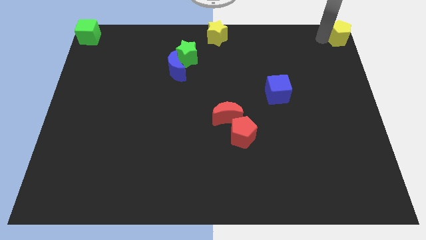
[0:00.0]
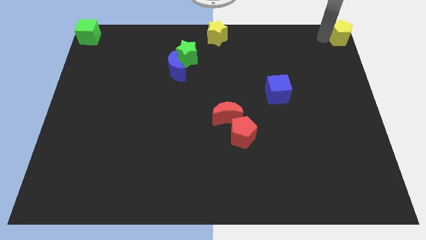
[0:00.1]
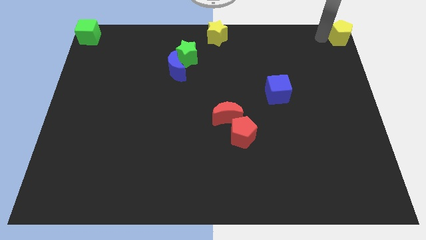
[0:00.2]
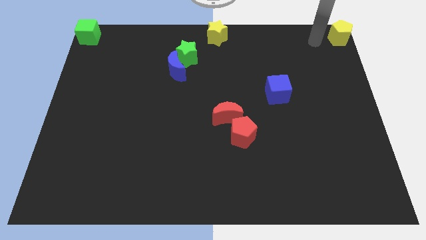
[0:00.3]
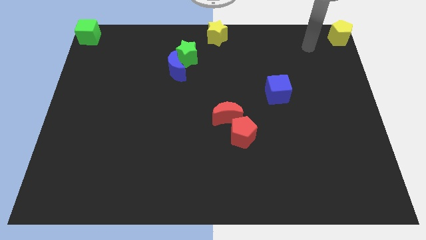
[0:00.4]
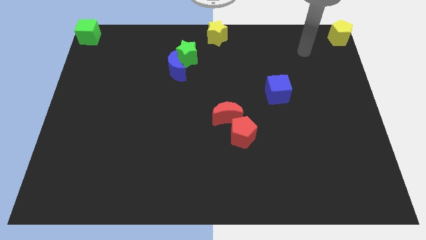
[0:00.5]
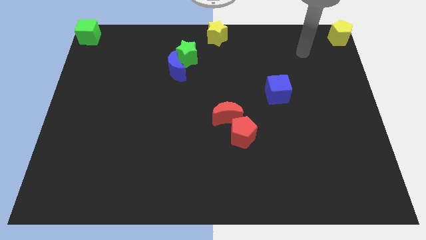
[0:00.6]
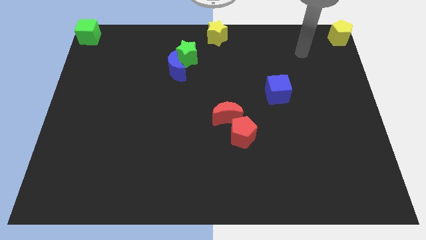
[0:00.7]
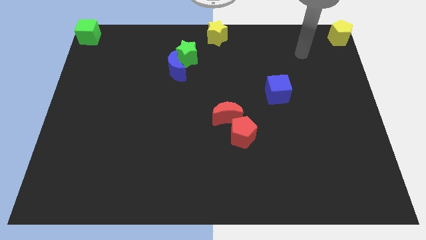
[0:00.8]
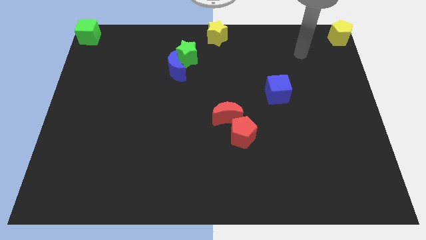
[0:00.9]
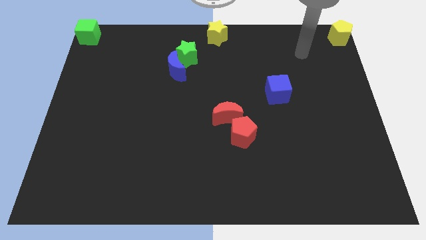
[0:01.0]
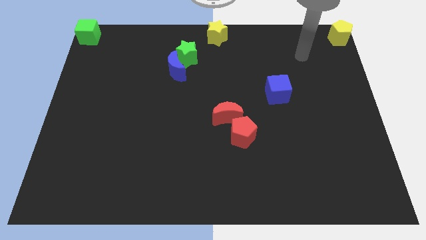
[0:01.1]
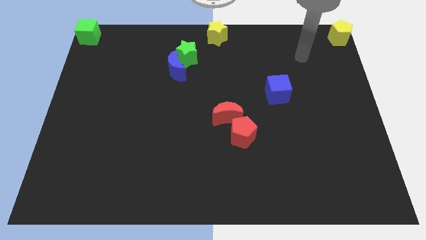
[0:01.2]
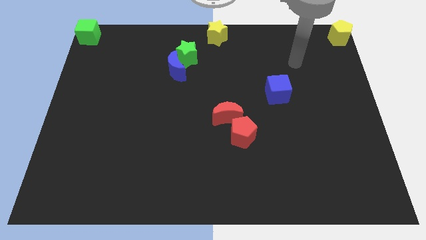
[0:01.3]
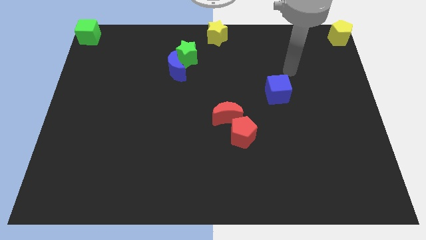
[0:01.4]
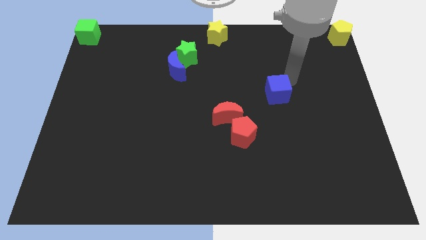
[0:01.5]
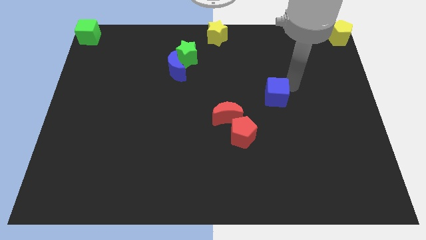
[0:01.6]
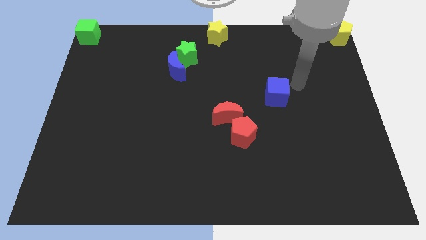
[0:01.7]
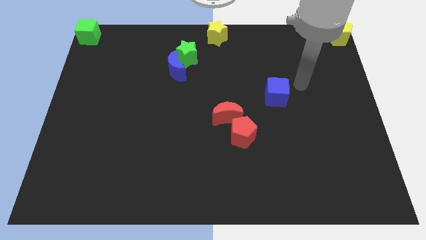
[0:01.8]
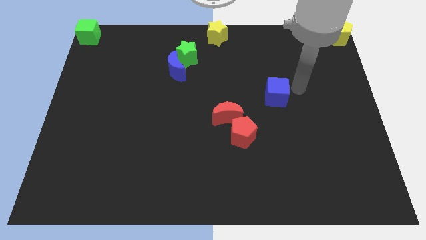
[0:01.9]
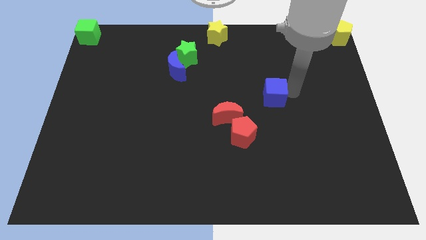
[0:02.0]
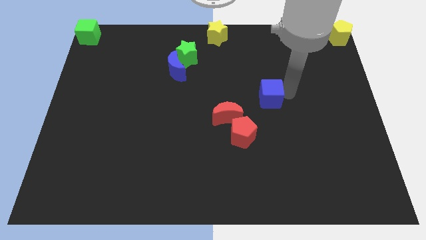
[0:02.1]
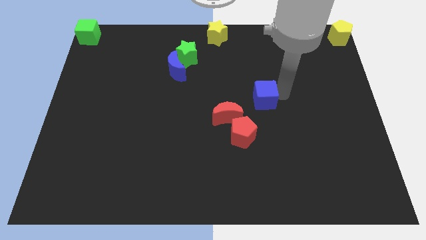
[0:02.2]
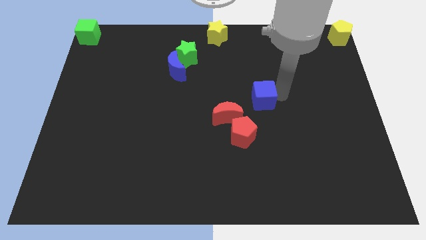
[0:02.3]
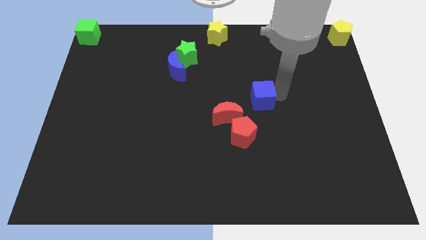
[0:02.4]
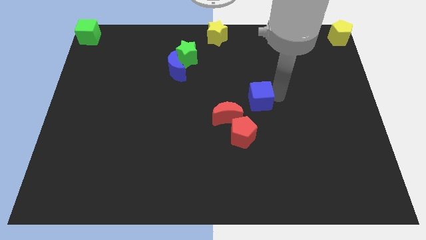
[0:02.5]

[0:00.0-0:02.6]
move arm near blue cube

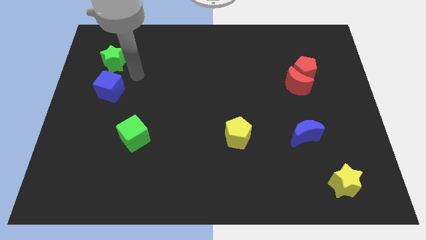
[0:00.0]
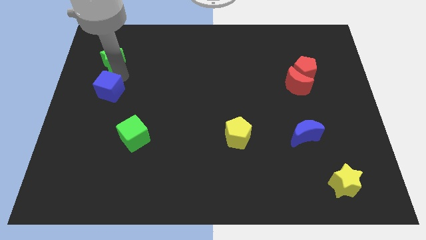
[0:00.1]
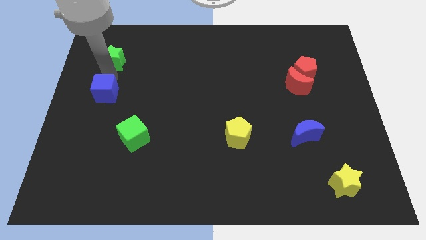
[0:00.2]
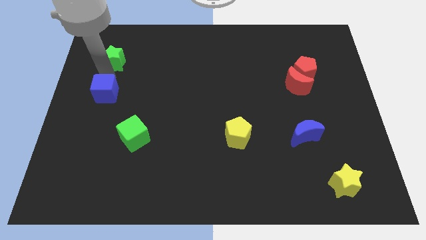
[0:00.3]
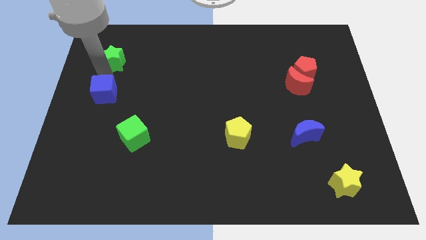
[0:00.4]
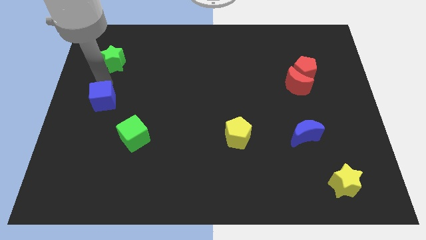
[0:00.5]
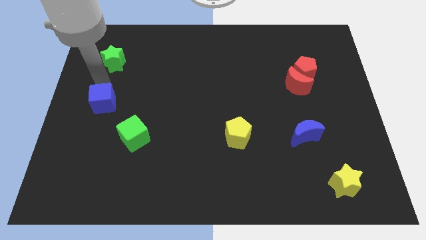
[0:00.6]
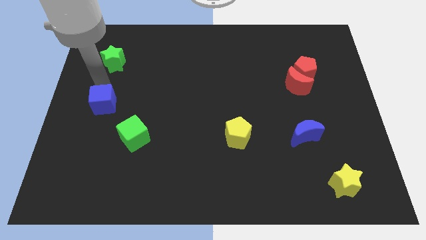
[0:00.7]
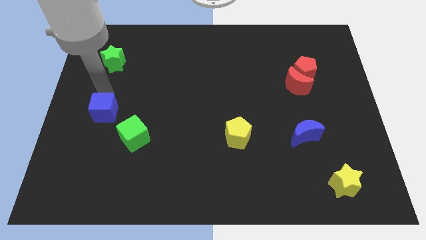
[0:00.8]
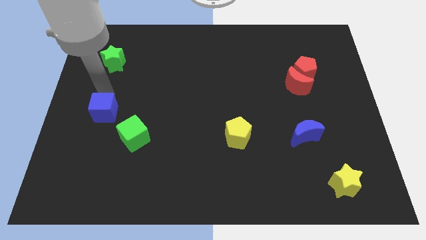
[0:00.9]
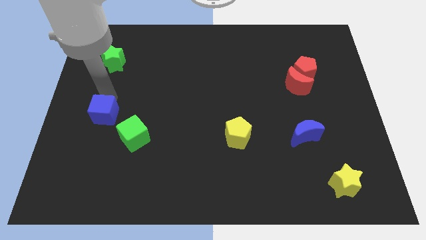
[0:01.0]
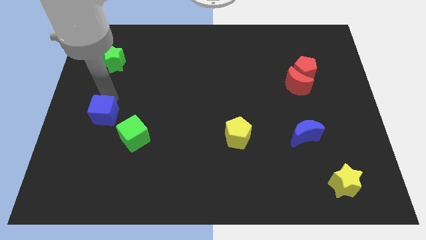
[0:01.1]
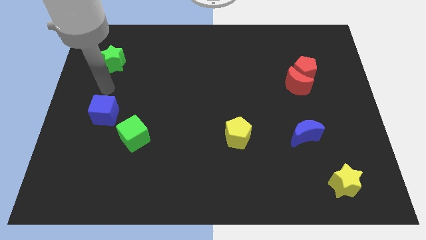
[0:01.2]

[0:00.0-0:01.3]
push blue cube to the top left of green cube

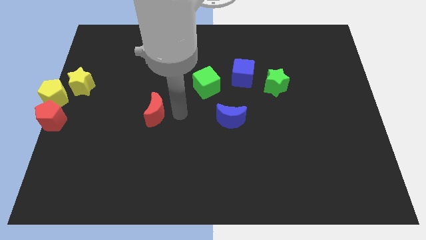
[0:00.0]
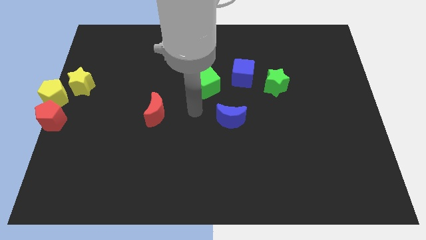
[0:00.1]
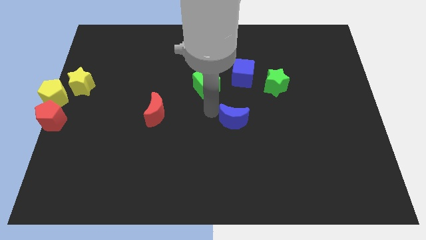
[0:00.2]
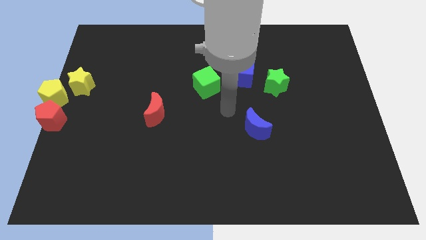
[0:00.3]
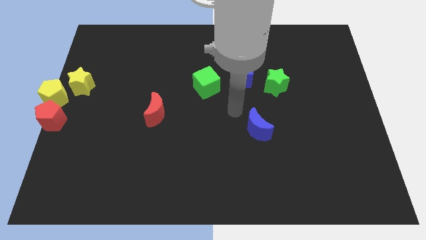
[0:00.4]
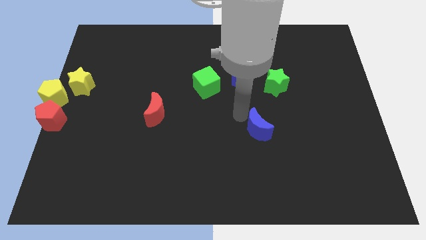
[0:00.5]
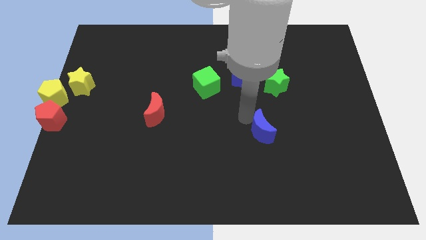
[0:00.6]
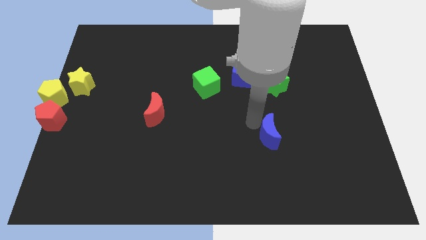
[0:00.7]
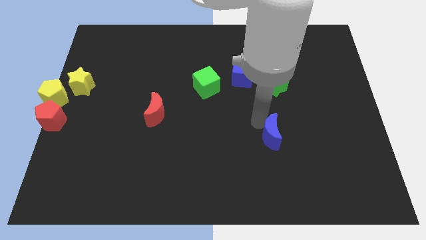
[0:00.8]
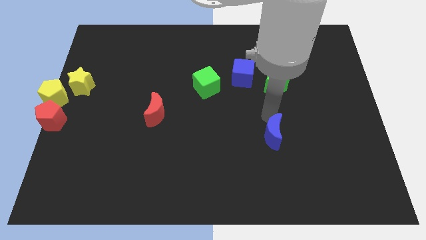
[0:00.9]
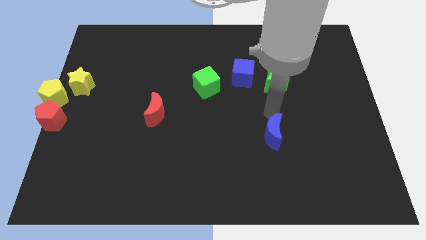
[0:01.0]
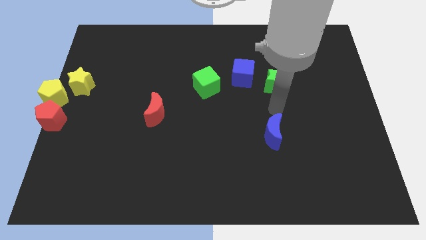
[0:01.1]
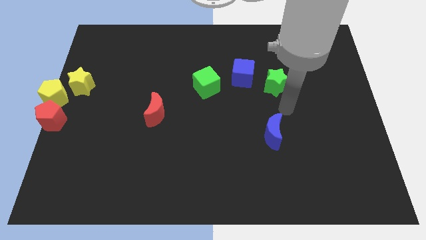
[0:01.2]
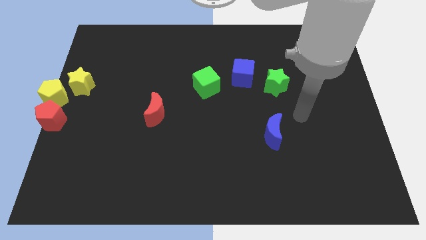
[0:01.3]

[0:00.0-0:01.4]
place the blue moon diagonally to green cube

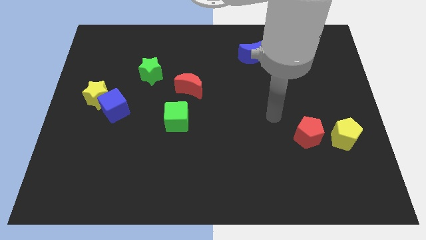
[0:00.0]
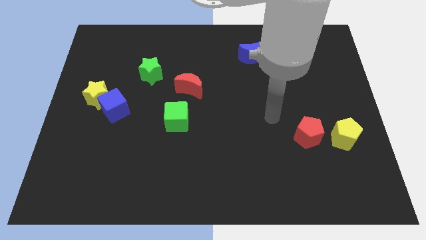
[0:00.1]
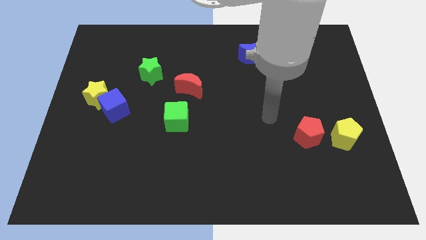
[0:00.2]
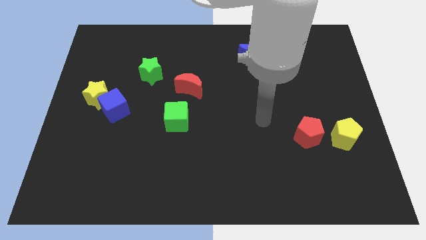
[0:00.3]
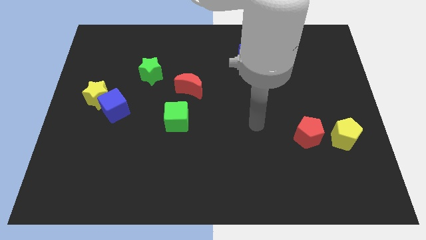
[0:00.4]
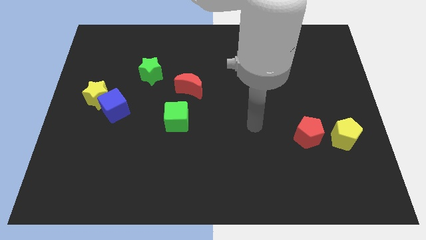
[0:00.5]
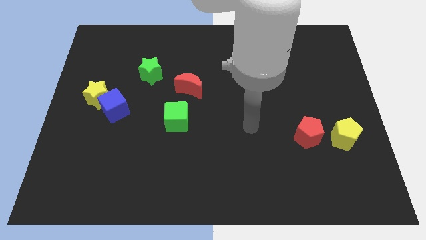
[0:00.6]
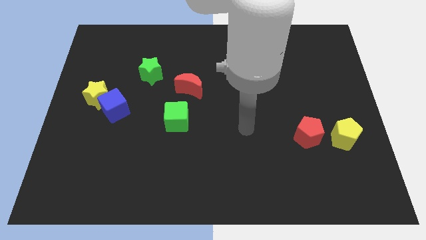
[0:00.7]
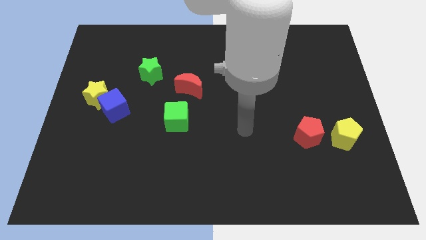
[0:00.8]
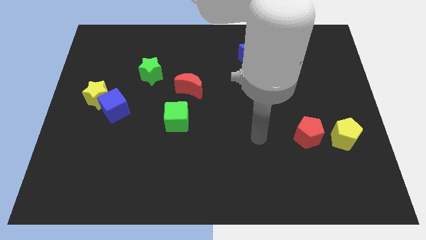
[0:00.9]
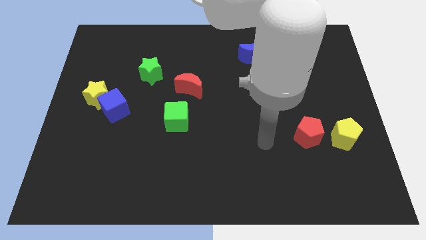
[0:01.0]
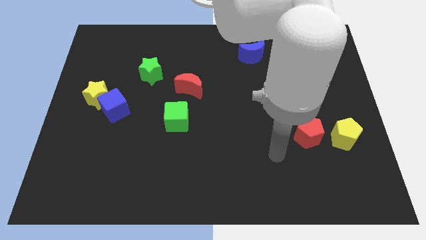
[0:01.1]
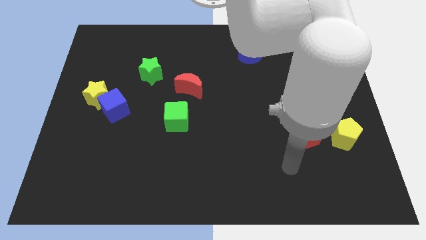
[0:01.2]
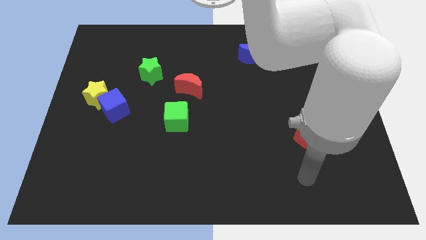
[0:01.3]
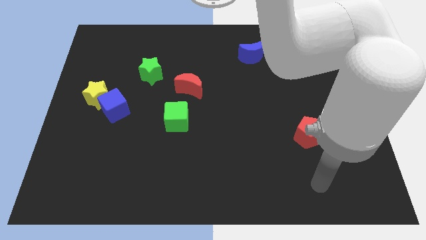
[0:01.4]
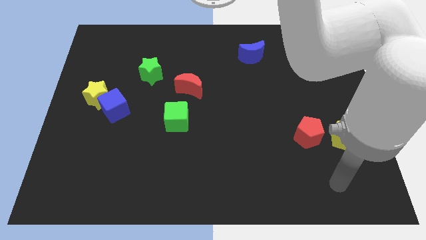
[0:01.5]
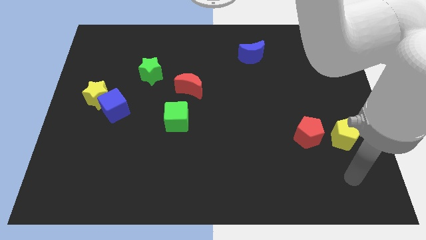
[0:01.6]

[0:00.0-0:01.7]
put your hand below the yellow pentagon

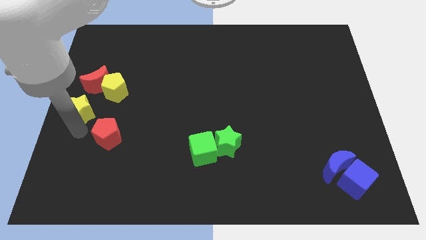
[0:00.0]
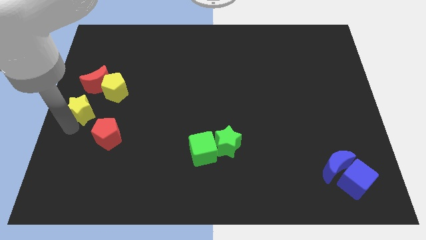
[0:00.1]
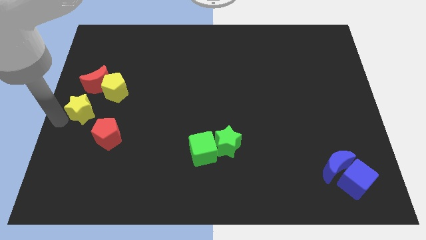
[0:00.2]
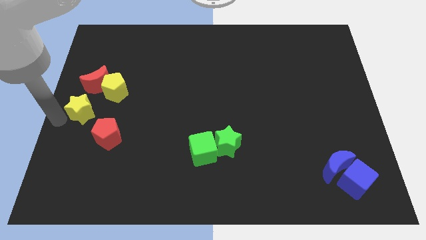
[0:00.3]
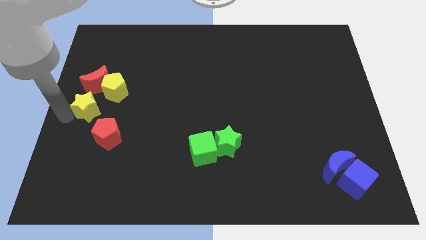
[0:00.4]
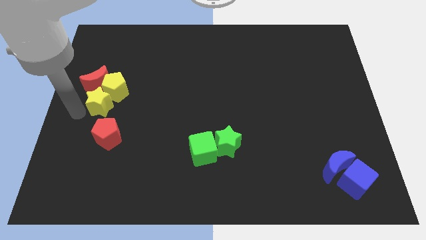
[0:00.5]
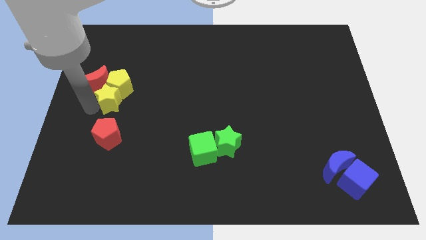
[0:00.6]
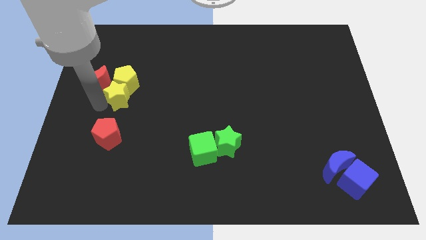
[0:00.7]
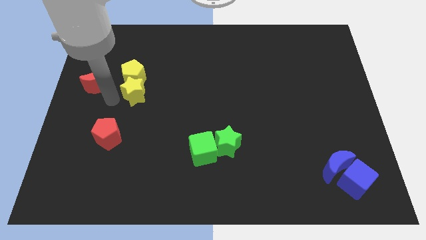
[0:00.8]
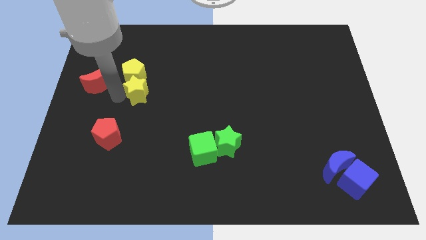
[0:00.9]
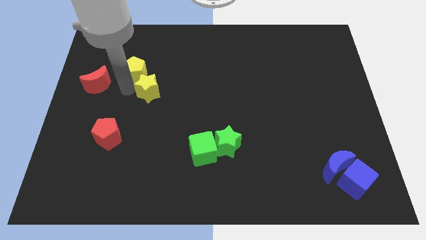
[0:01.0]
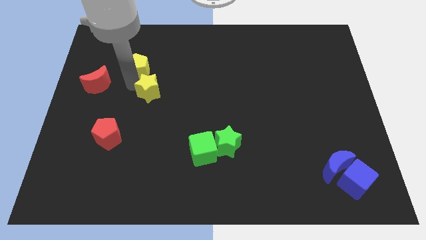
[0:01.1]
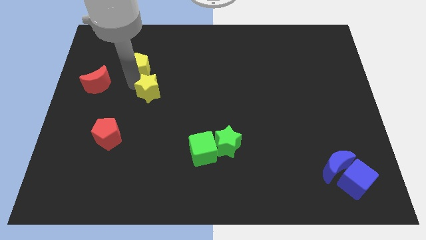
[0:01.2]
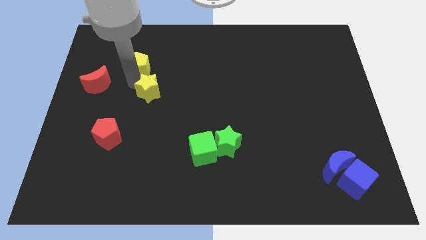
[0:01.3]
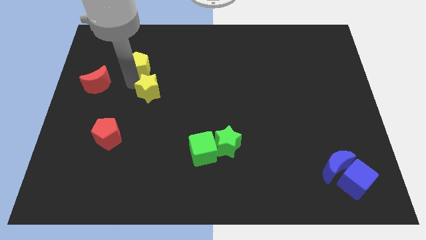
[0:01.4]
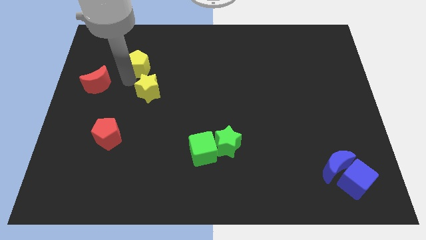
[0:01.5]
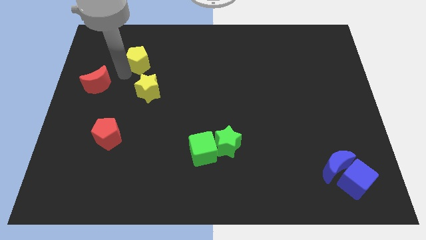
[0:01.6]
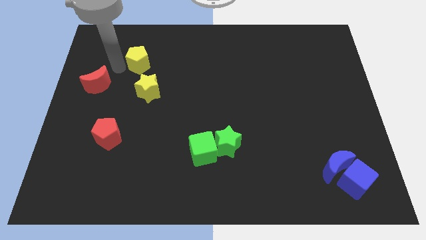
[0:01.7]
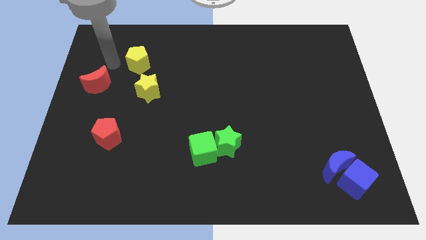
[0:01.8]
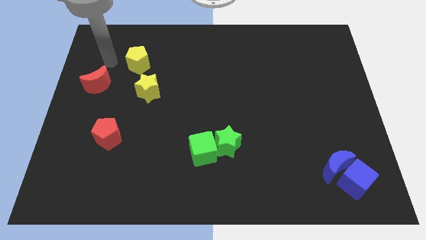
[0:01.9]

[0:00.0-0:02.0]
push yellow star into the yellow pentagon
